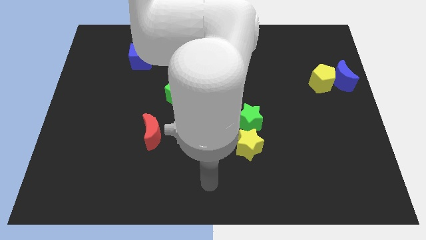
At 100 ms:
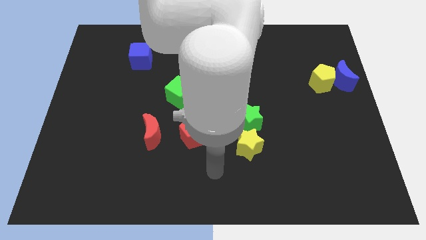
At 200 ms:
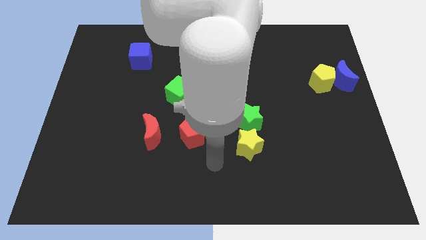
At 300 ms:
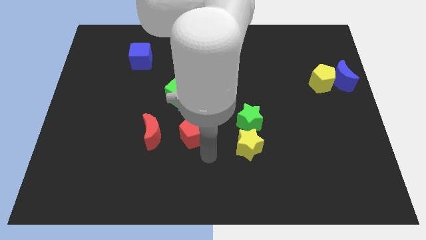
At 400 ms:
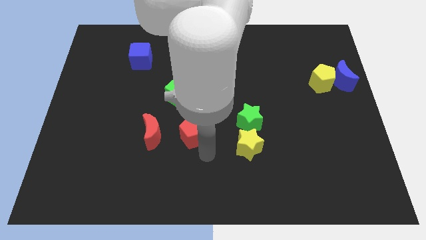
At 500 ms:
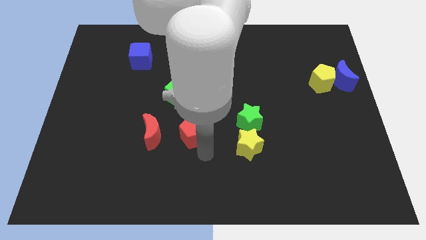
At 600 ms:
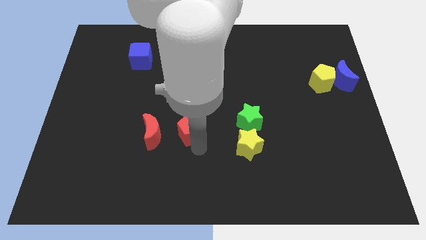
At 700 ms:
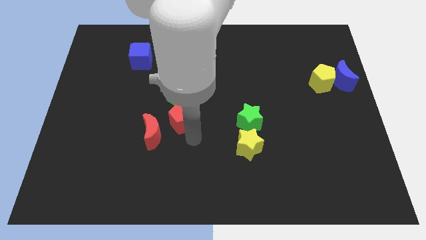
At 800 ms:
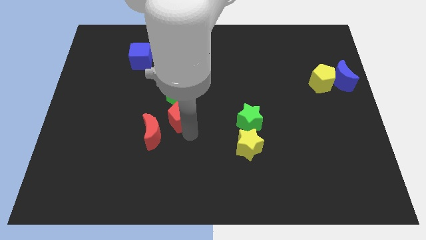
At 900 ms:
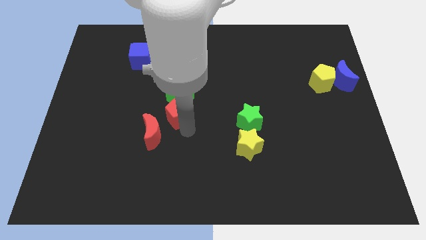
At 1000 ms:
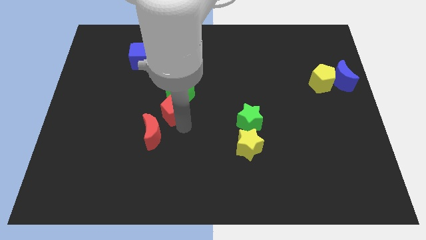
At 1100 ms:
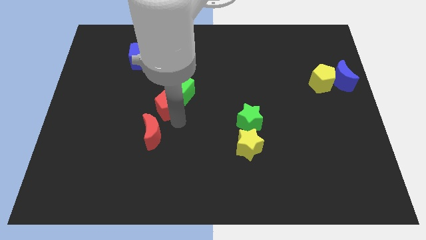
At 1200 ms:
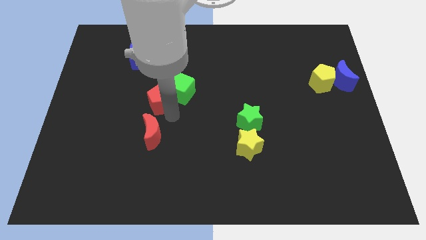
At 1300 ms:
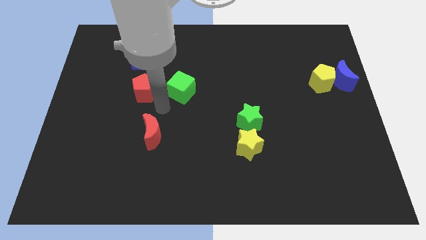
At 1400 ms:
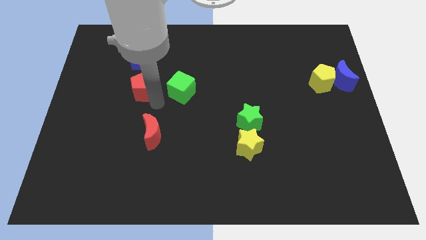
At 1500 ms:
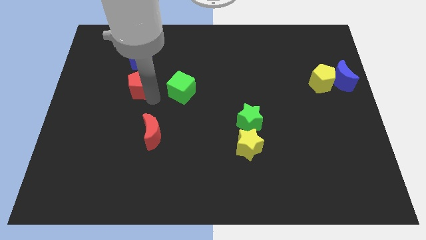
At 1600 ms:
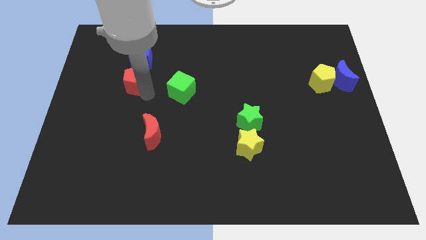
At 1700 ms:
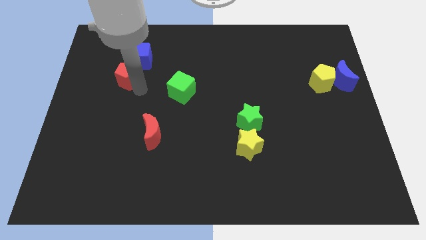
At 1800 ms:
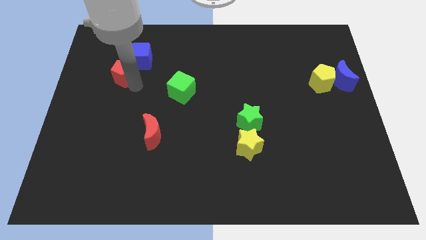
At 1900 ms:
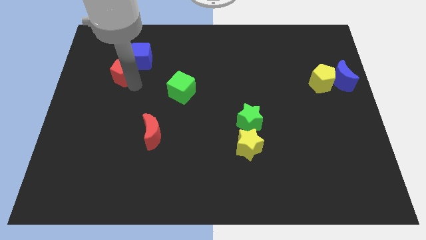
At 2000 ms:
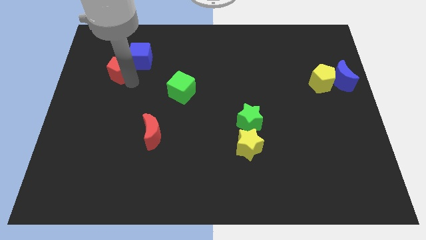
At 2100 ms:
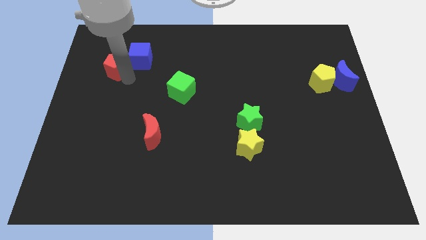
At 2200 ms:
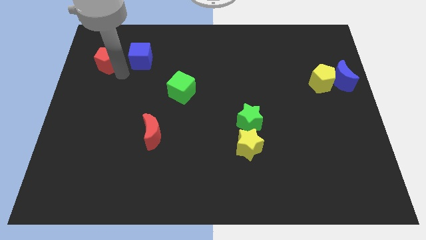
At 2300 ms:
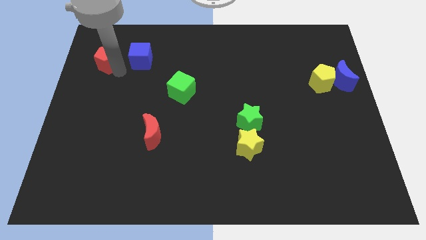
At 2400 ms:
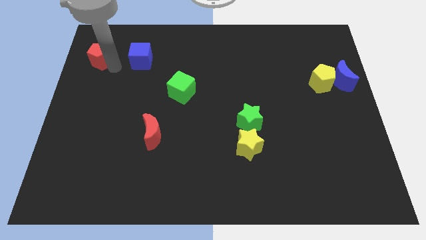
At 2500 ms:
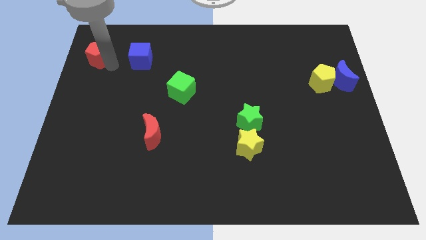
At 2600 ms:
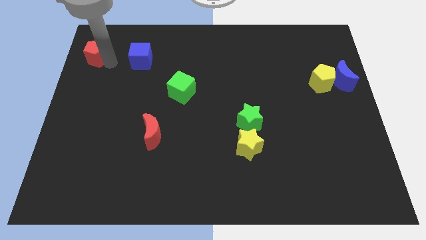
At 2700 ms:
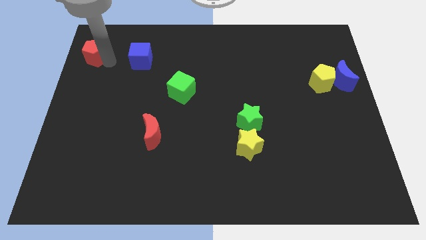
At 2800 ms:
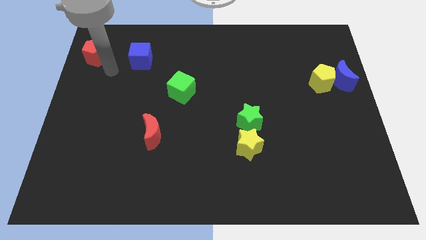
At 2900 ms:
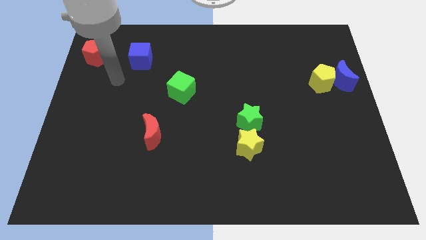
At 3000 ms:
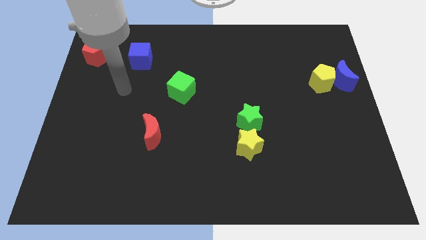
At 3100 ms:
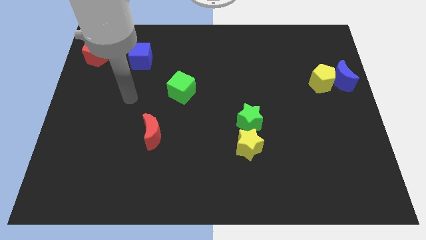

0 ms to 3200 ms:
move the red pentagon to the top left corner of the baord

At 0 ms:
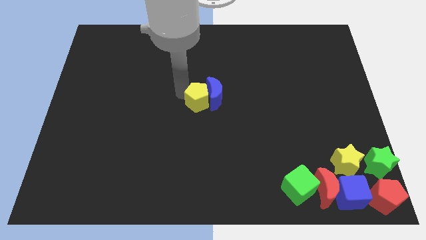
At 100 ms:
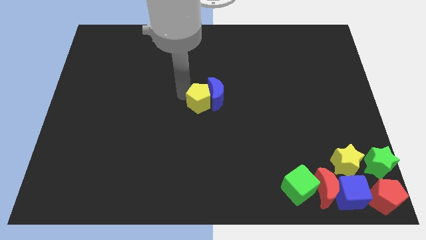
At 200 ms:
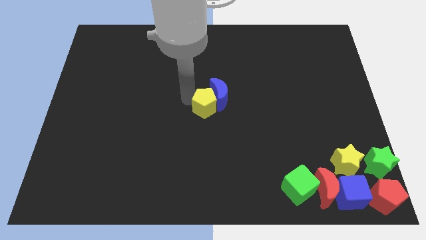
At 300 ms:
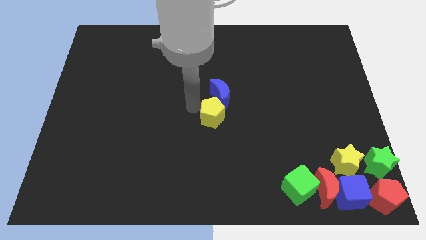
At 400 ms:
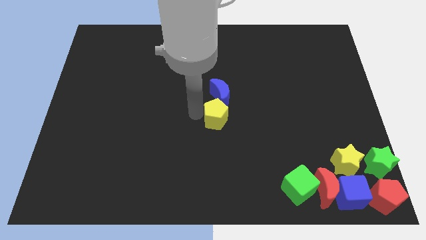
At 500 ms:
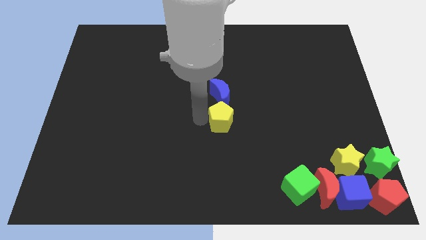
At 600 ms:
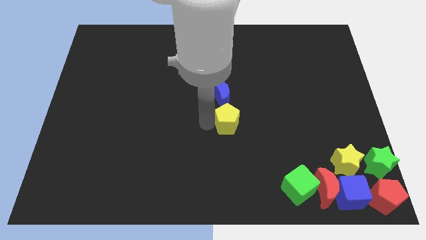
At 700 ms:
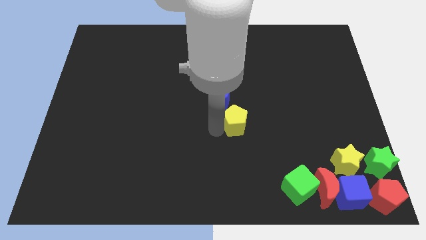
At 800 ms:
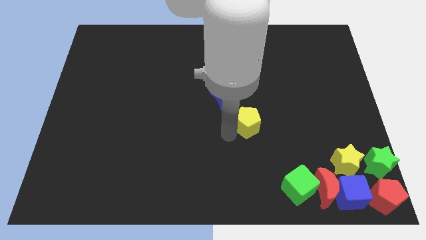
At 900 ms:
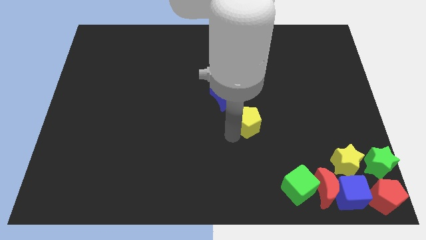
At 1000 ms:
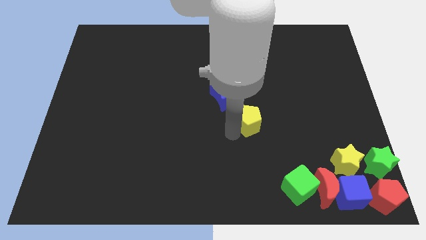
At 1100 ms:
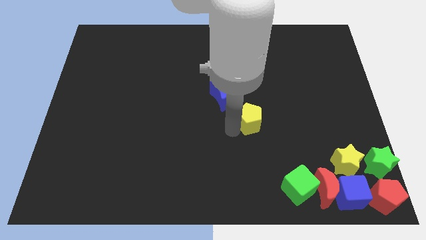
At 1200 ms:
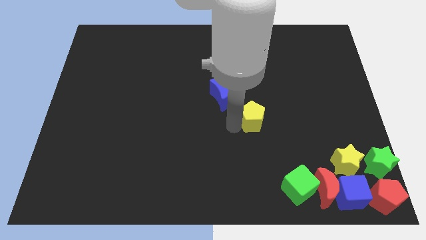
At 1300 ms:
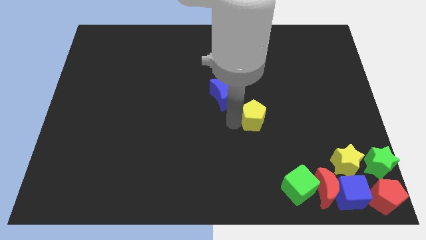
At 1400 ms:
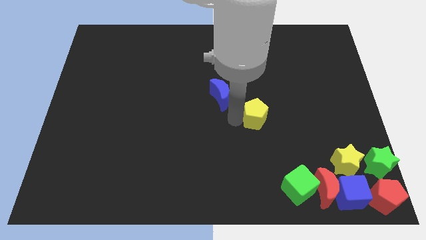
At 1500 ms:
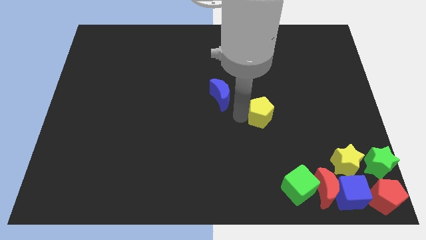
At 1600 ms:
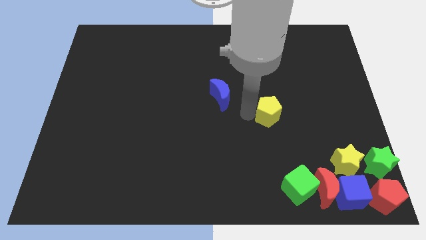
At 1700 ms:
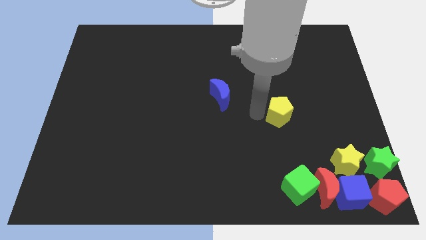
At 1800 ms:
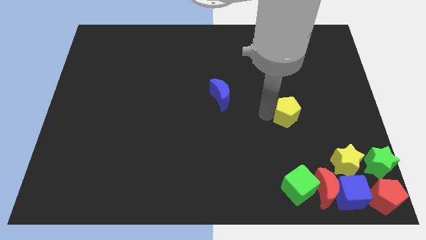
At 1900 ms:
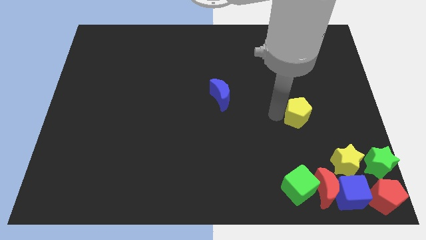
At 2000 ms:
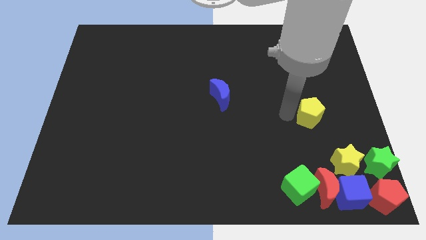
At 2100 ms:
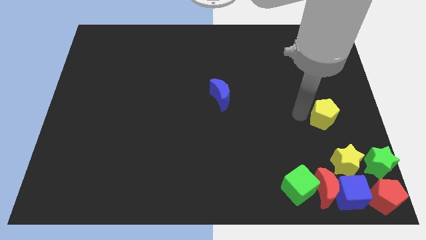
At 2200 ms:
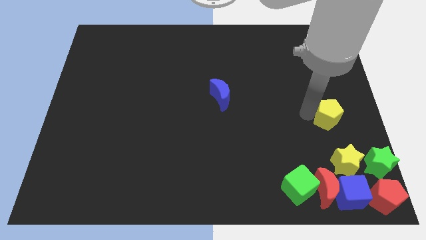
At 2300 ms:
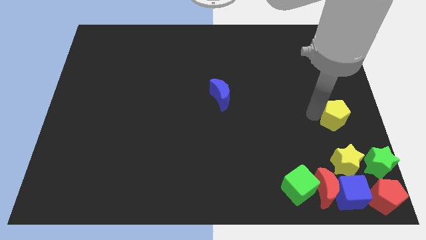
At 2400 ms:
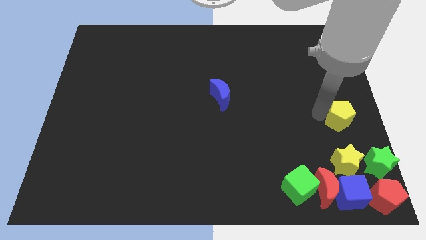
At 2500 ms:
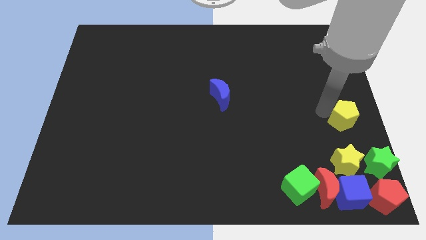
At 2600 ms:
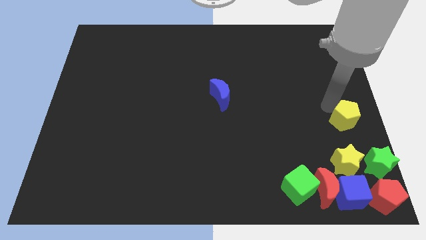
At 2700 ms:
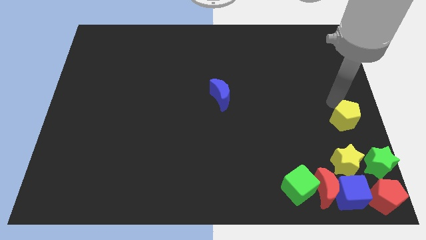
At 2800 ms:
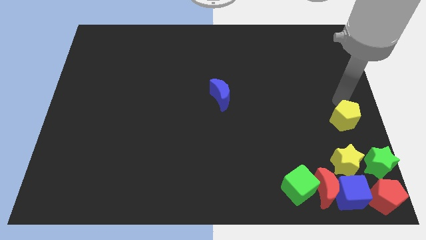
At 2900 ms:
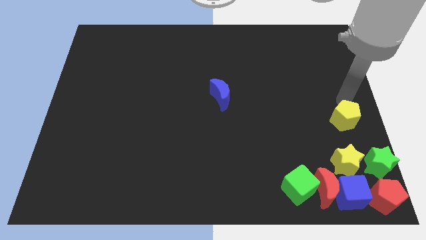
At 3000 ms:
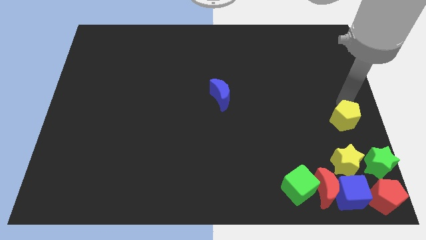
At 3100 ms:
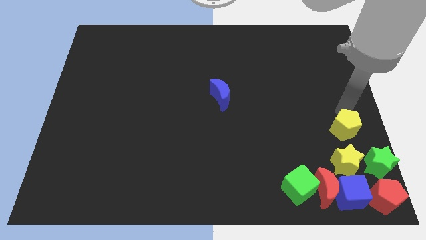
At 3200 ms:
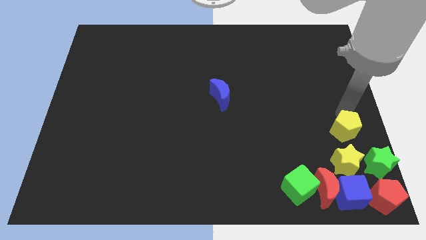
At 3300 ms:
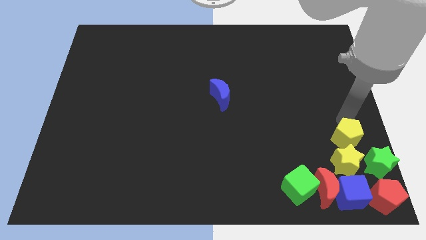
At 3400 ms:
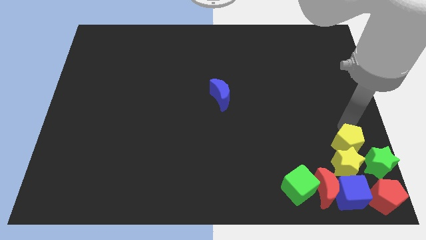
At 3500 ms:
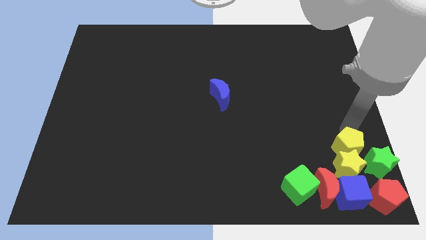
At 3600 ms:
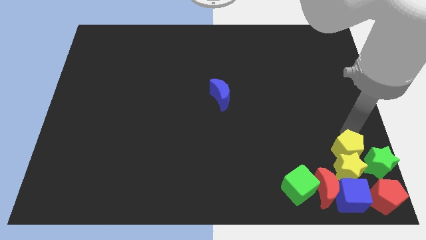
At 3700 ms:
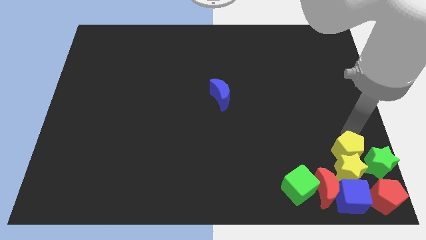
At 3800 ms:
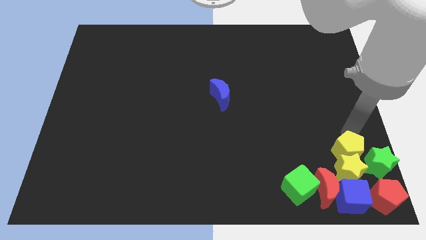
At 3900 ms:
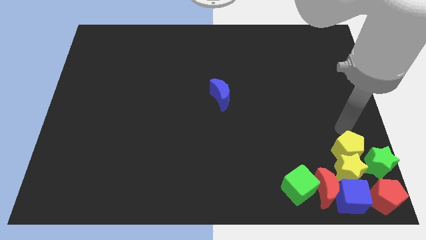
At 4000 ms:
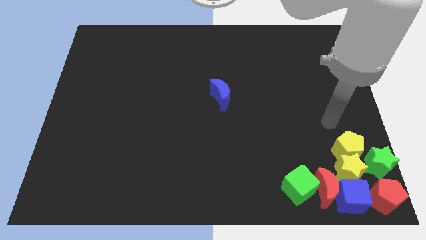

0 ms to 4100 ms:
move the yellow pentagon into the top of yellow star

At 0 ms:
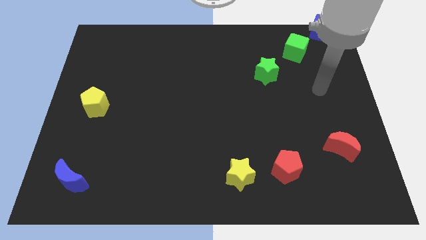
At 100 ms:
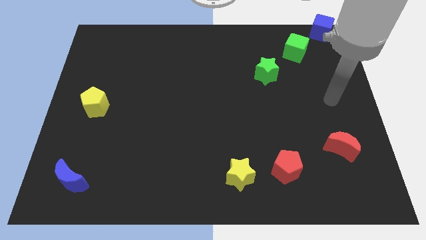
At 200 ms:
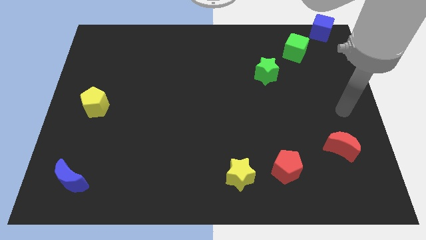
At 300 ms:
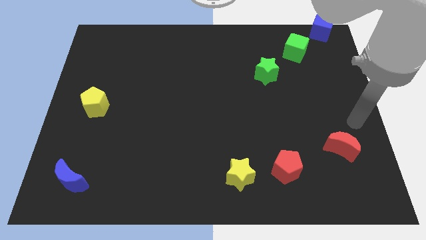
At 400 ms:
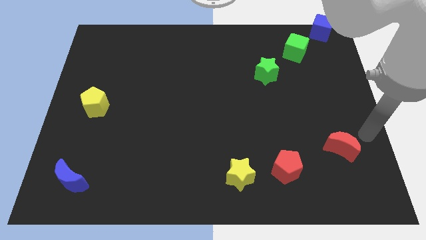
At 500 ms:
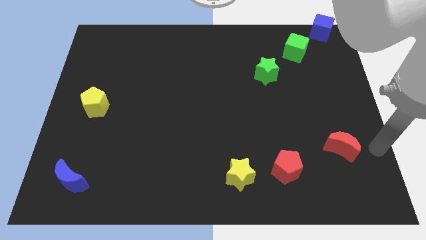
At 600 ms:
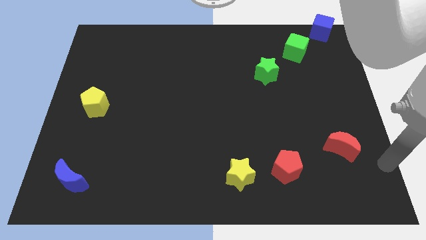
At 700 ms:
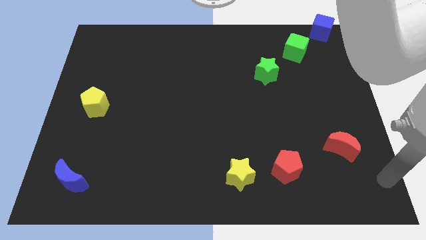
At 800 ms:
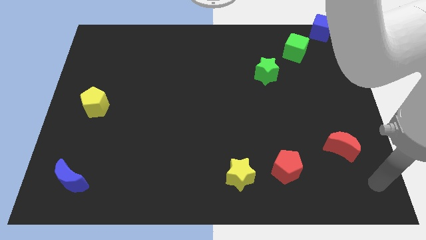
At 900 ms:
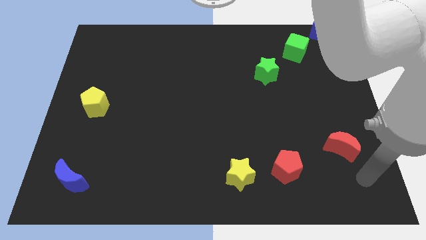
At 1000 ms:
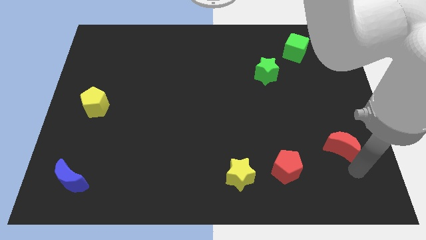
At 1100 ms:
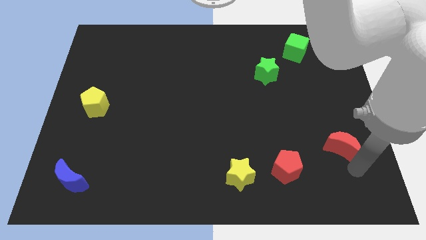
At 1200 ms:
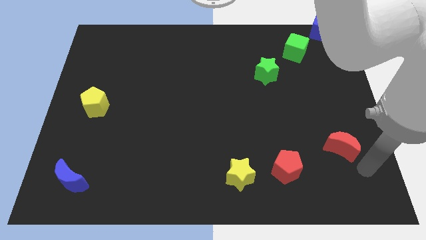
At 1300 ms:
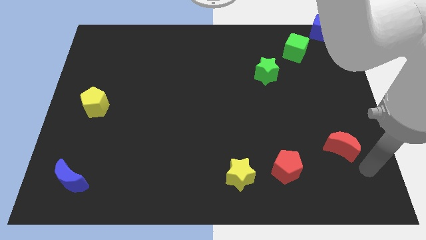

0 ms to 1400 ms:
move your hand near to the red crescent

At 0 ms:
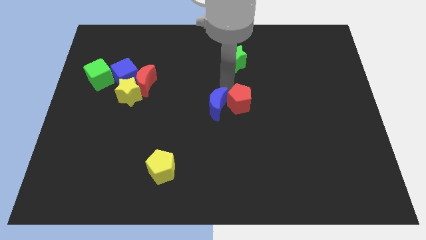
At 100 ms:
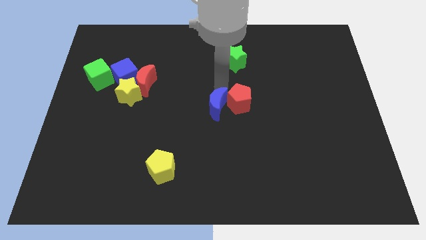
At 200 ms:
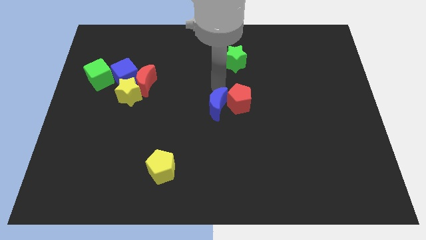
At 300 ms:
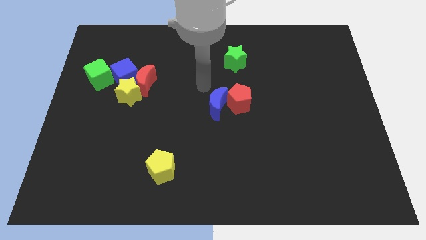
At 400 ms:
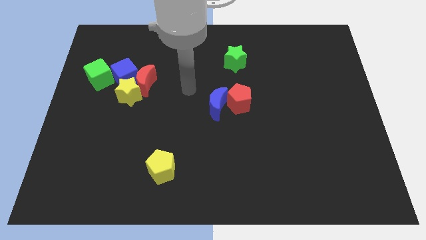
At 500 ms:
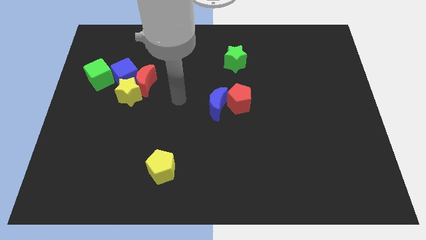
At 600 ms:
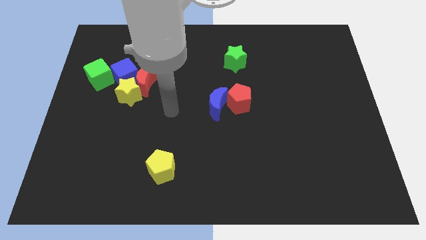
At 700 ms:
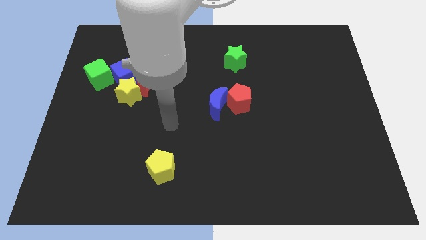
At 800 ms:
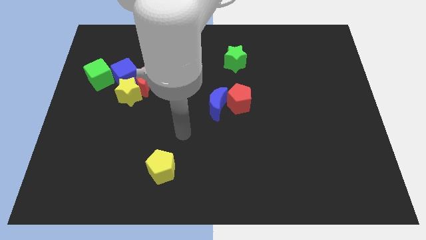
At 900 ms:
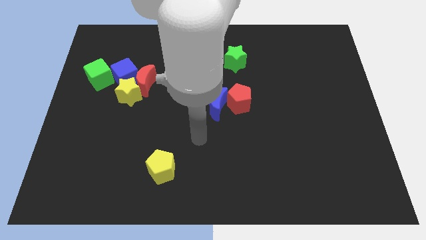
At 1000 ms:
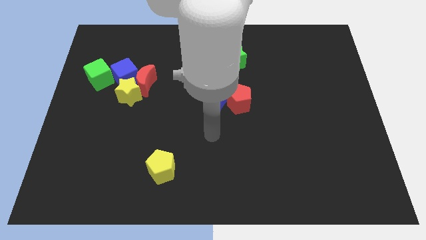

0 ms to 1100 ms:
point your arm to the bottom of blue crescent
